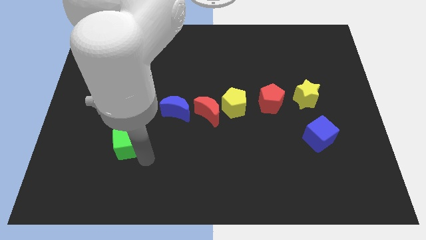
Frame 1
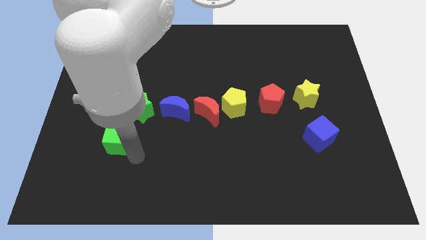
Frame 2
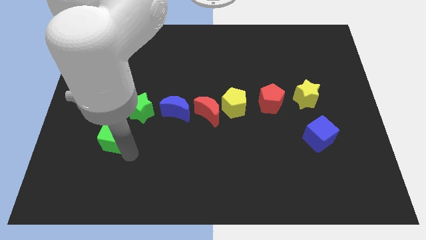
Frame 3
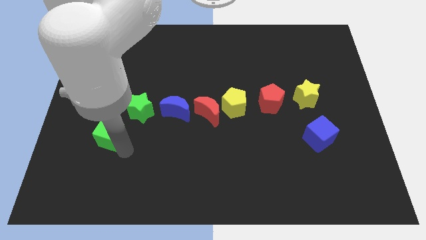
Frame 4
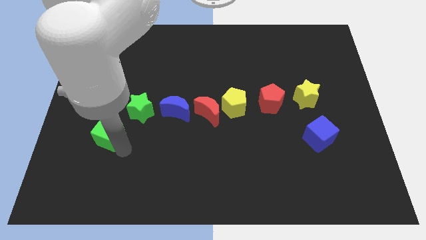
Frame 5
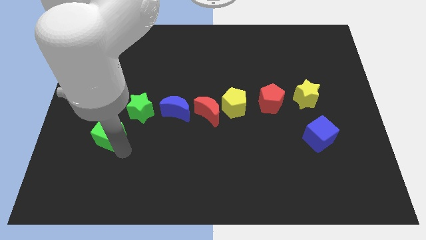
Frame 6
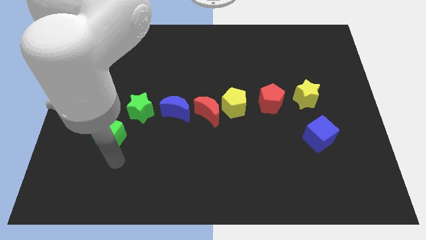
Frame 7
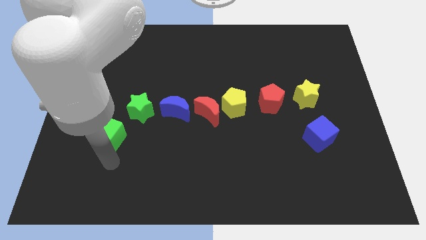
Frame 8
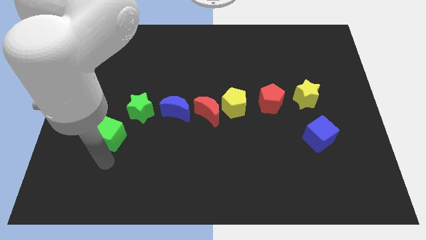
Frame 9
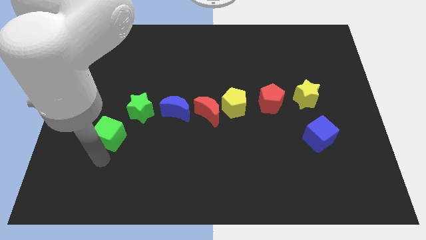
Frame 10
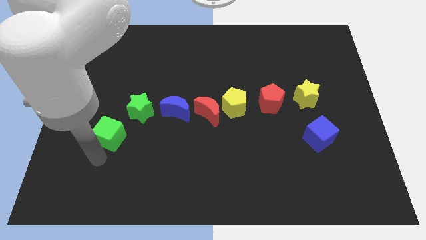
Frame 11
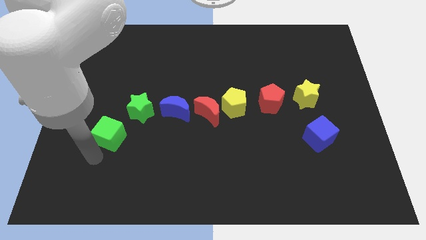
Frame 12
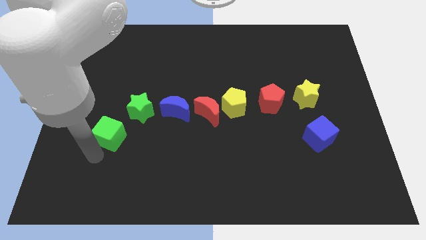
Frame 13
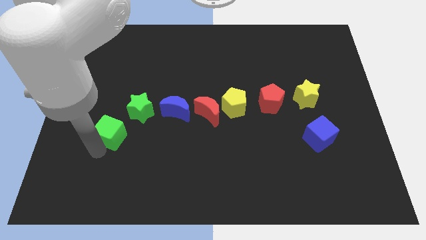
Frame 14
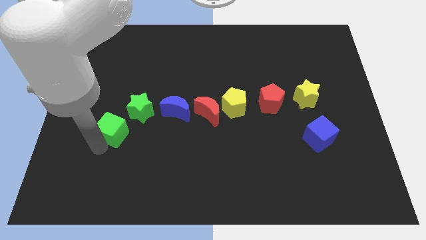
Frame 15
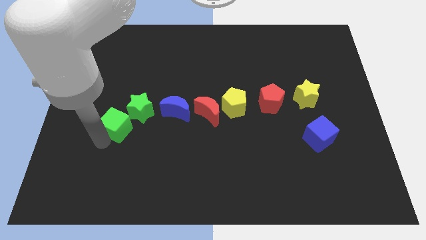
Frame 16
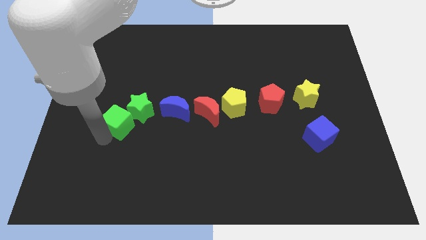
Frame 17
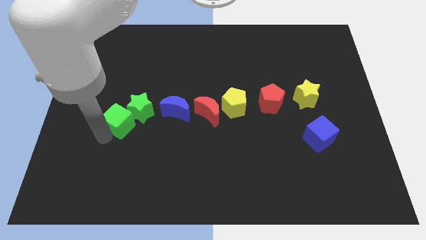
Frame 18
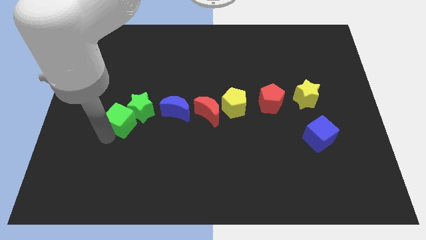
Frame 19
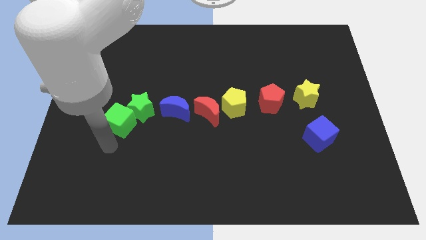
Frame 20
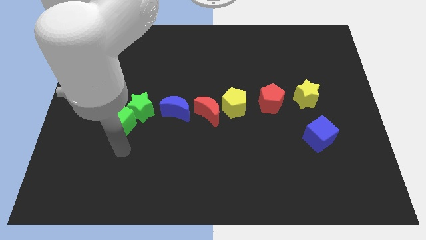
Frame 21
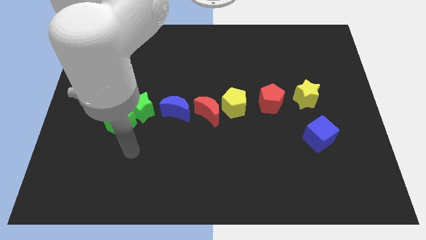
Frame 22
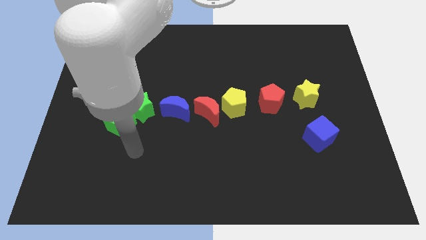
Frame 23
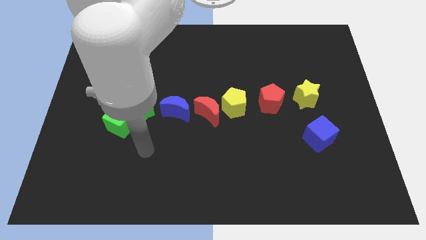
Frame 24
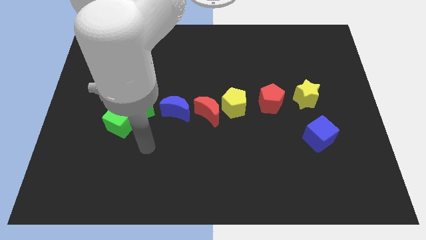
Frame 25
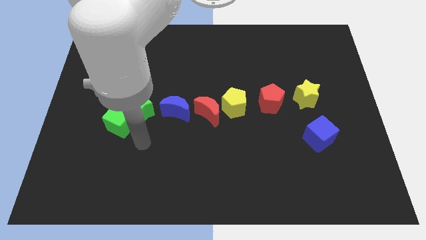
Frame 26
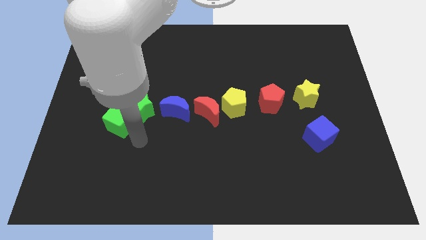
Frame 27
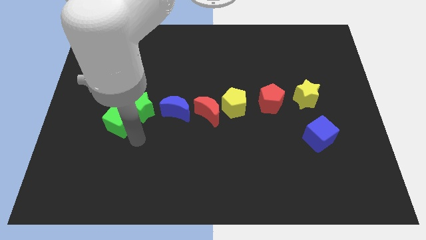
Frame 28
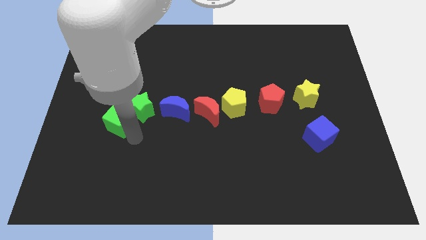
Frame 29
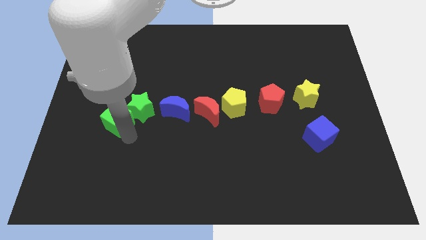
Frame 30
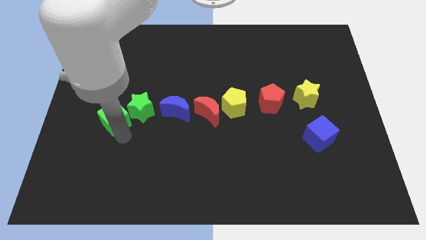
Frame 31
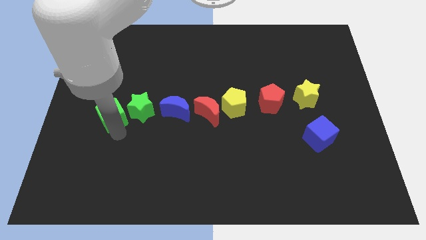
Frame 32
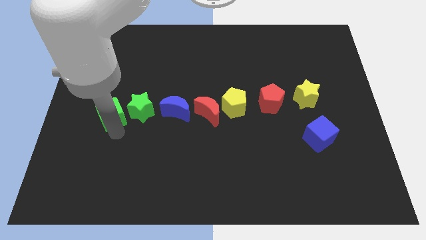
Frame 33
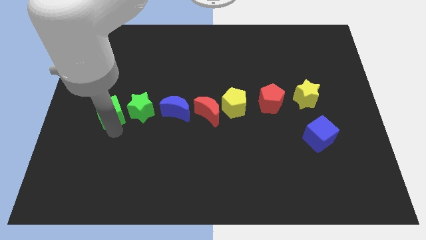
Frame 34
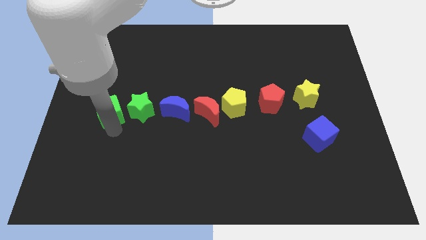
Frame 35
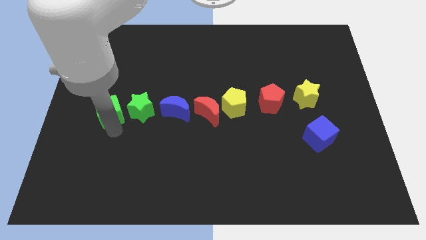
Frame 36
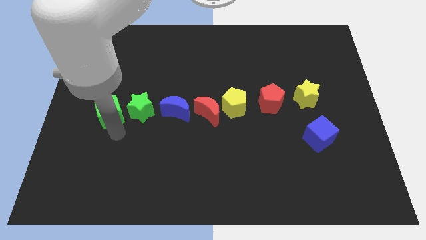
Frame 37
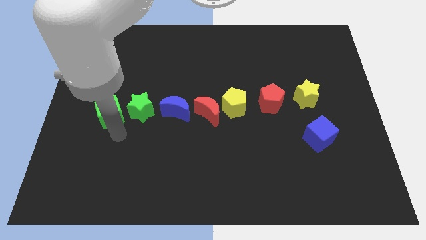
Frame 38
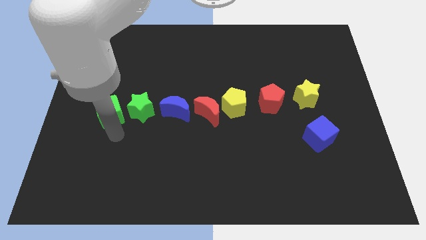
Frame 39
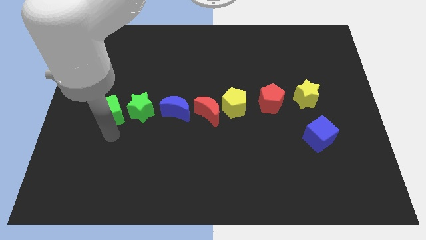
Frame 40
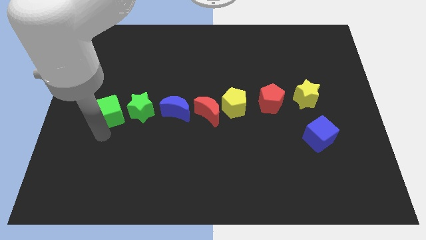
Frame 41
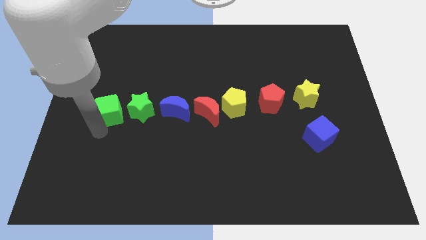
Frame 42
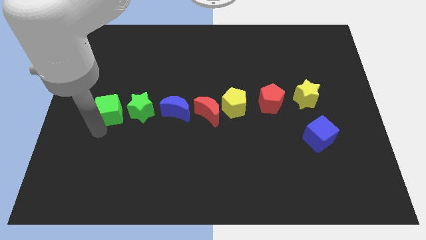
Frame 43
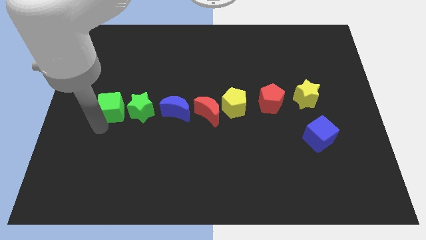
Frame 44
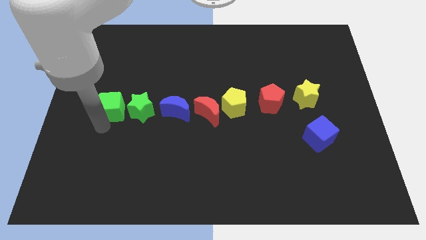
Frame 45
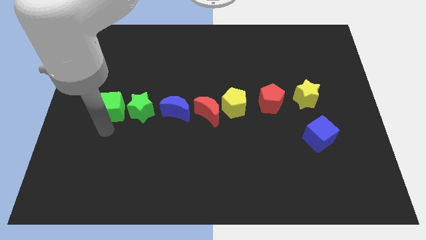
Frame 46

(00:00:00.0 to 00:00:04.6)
move the green cube to the left side of the green star

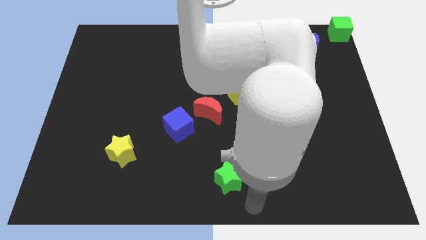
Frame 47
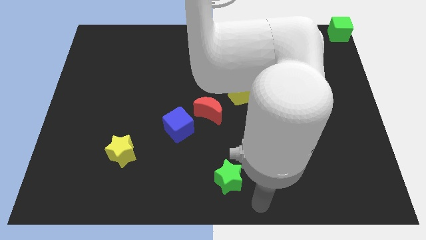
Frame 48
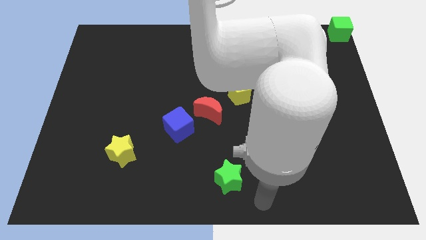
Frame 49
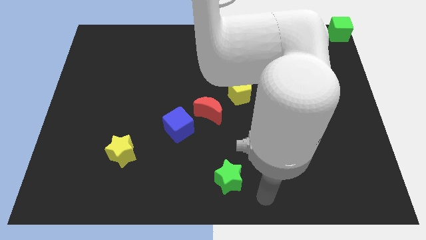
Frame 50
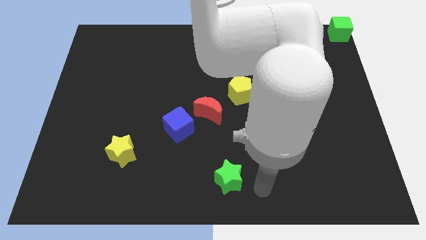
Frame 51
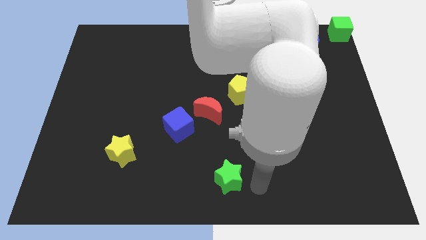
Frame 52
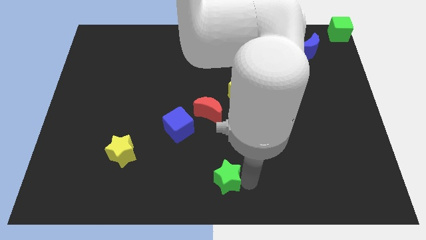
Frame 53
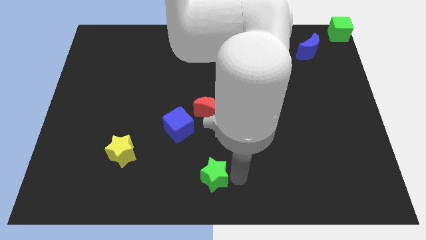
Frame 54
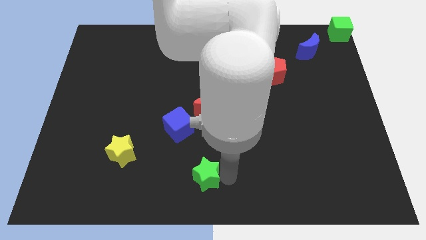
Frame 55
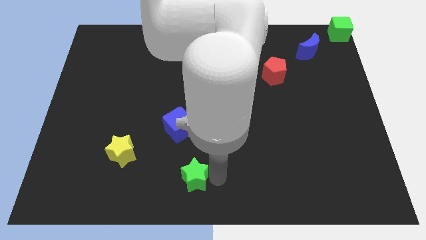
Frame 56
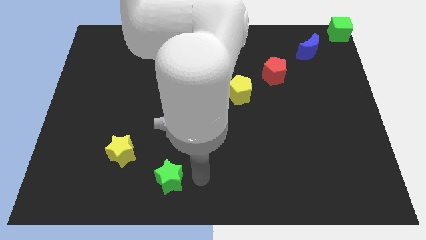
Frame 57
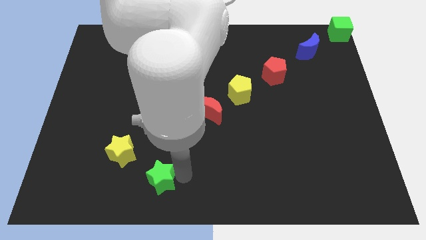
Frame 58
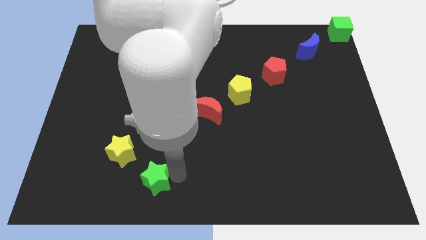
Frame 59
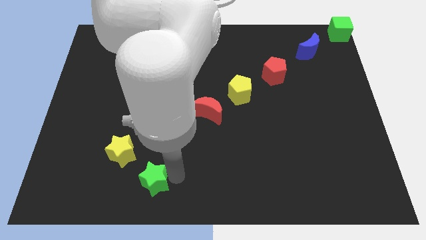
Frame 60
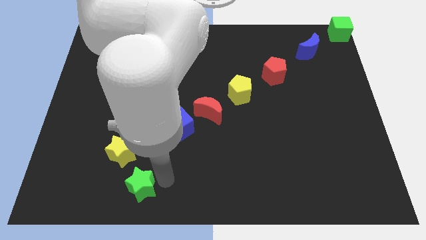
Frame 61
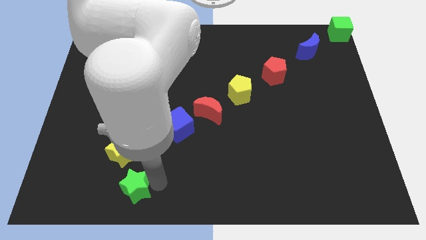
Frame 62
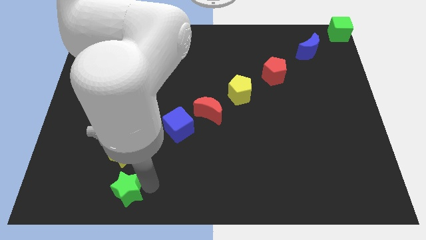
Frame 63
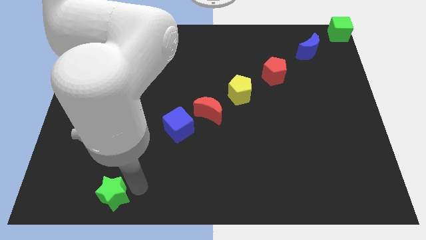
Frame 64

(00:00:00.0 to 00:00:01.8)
place the green star below the yellow star

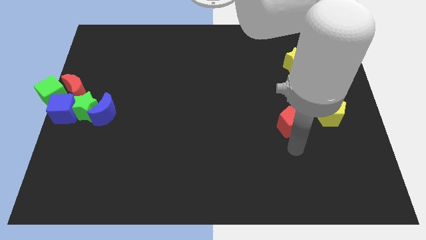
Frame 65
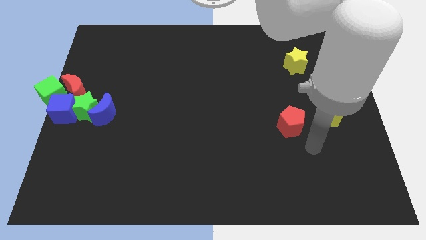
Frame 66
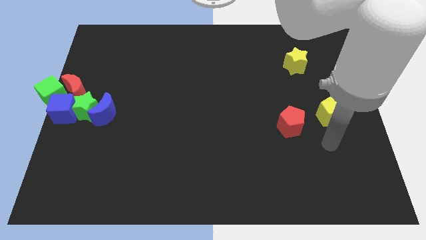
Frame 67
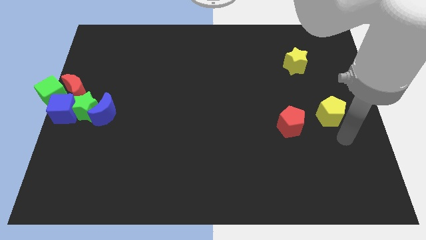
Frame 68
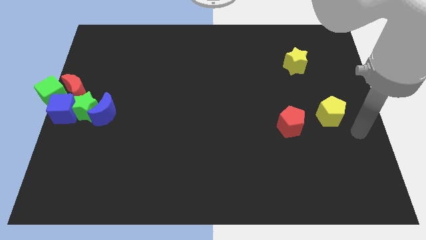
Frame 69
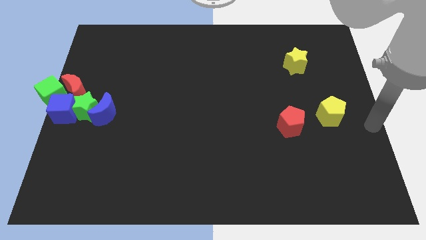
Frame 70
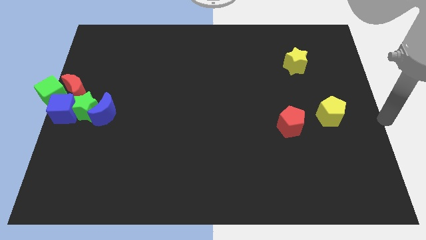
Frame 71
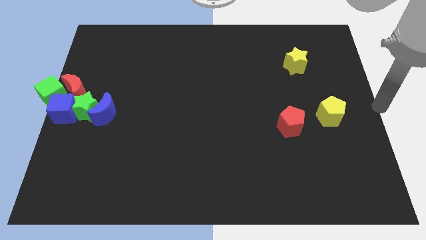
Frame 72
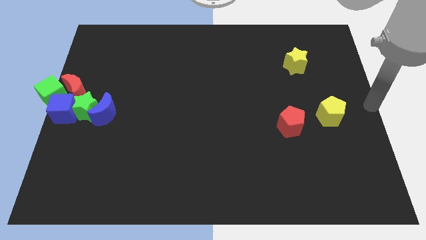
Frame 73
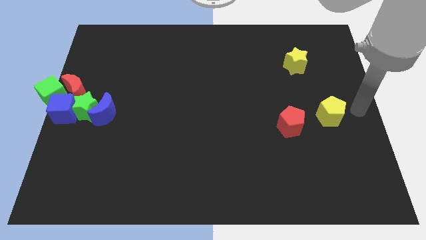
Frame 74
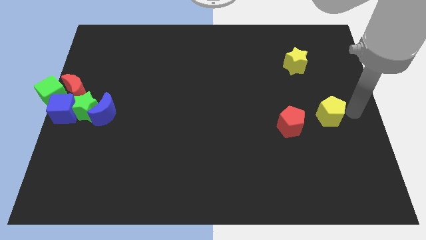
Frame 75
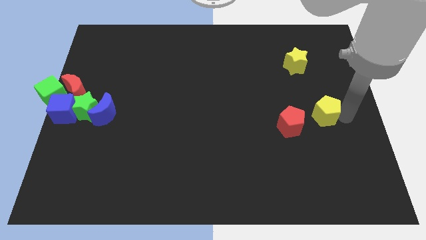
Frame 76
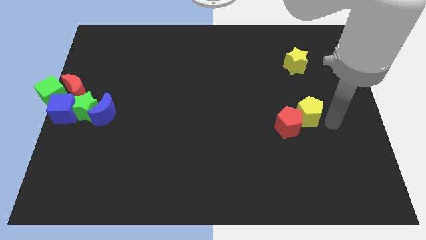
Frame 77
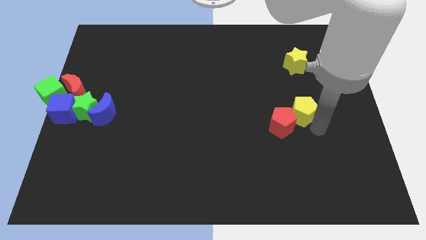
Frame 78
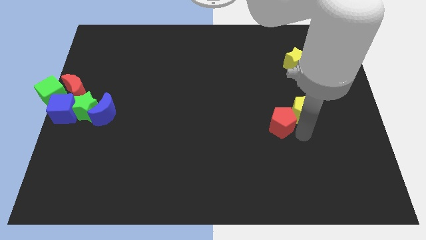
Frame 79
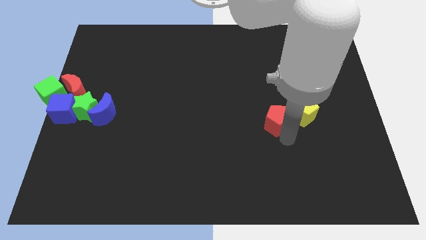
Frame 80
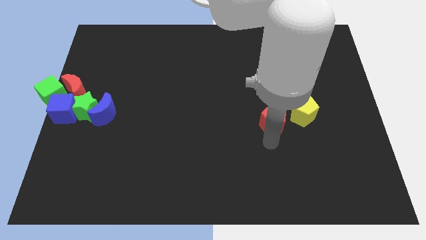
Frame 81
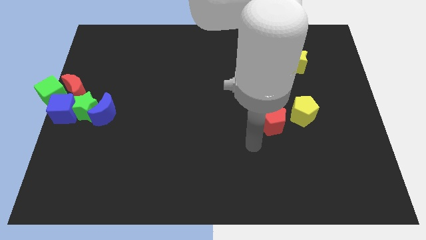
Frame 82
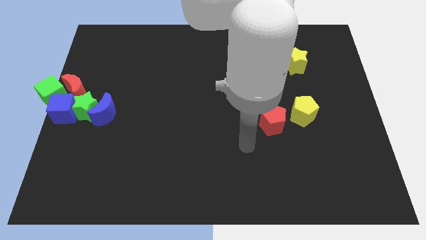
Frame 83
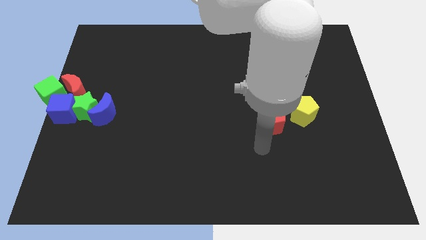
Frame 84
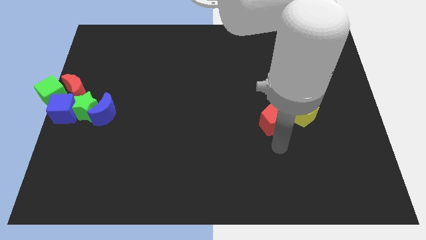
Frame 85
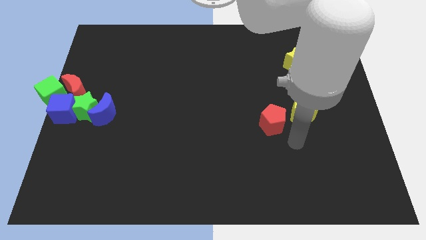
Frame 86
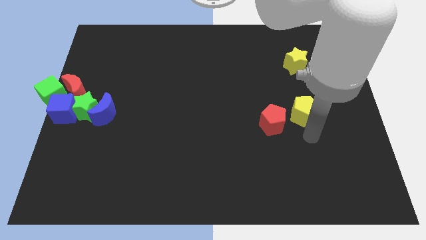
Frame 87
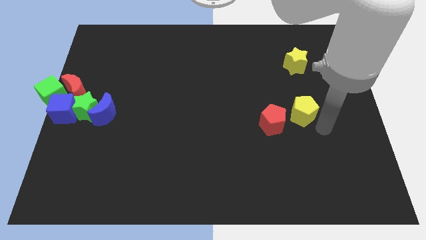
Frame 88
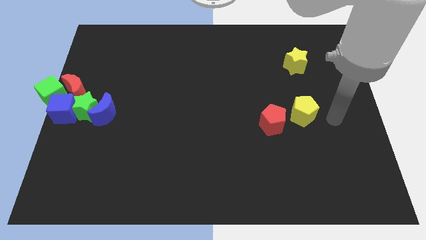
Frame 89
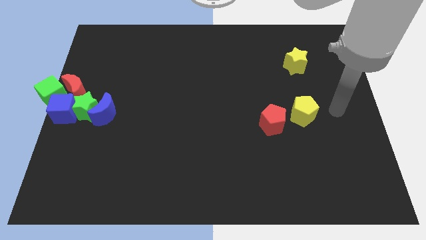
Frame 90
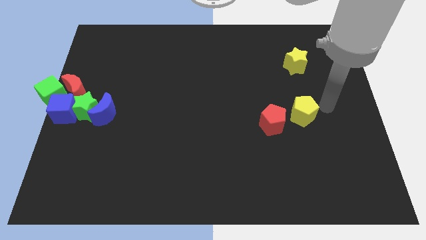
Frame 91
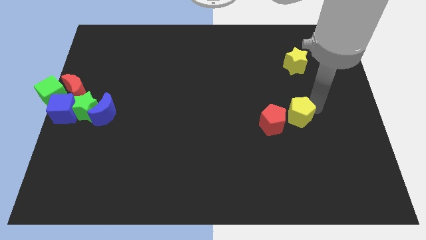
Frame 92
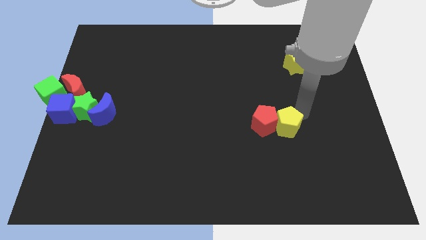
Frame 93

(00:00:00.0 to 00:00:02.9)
push the yellow pentagon into the red pentagon
